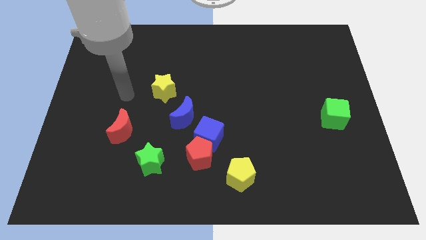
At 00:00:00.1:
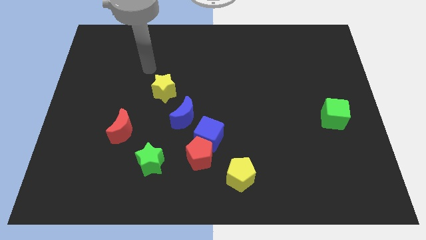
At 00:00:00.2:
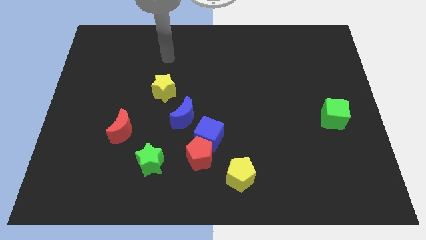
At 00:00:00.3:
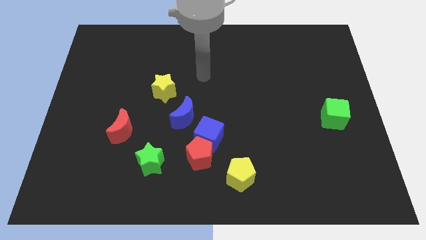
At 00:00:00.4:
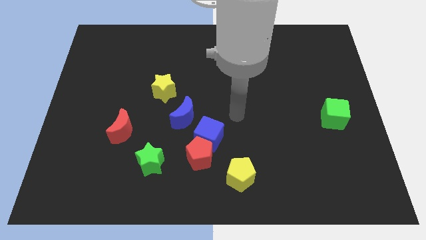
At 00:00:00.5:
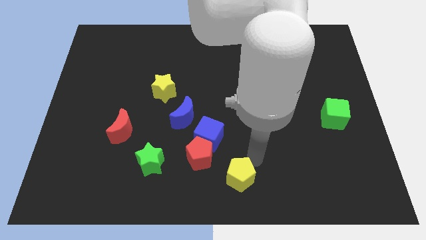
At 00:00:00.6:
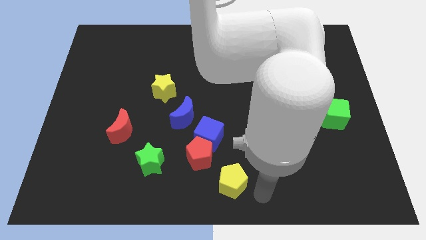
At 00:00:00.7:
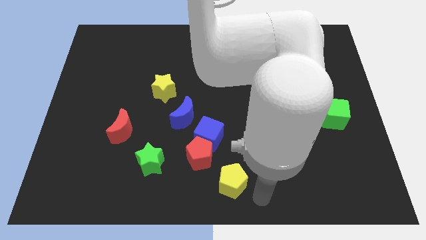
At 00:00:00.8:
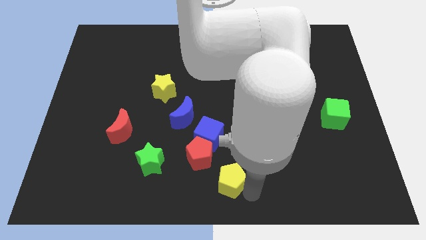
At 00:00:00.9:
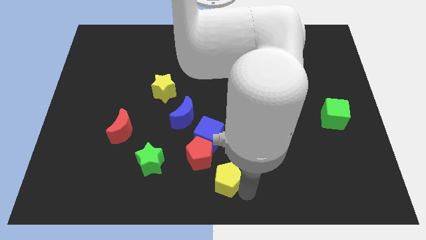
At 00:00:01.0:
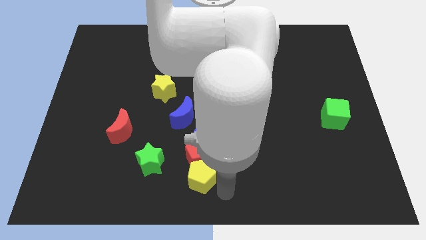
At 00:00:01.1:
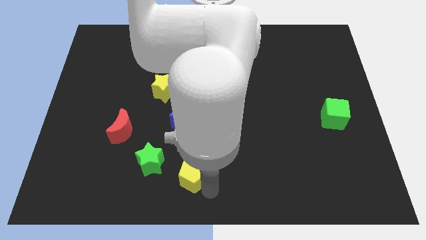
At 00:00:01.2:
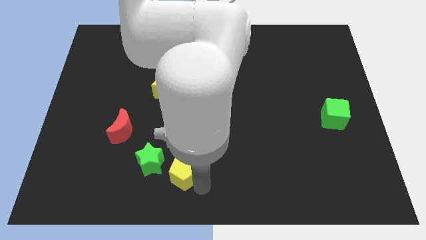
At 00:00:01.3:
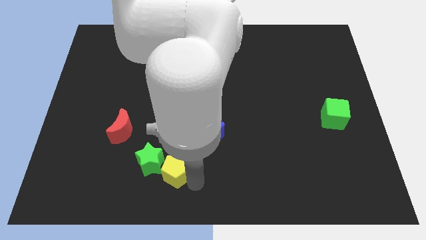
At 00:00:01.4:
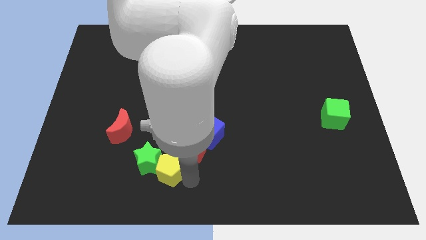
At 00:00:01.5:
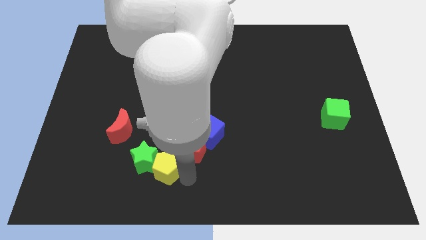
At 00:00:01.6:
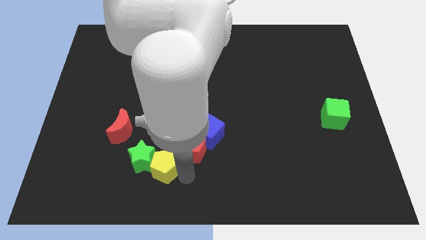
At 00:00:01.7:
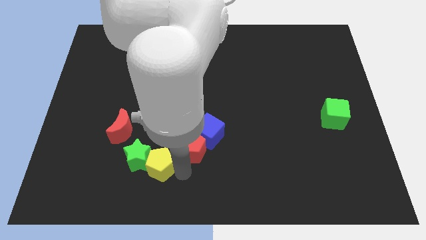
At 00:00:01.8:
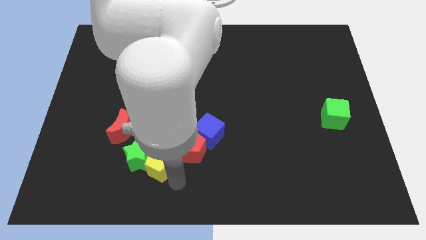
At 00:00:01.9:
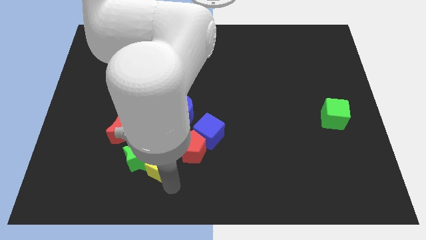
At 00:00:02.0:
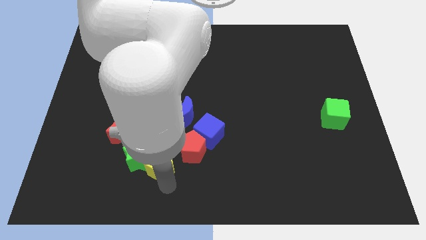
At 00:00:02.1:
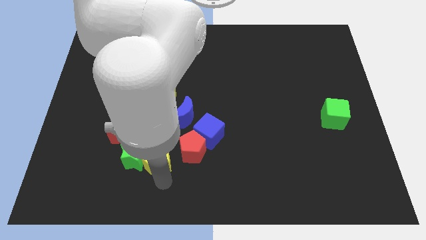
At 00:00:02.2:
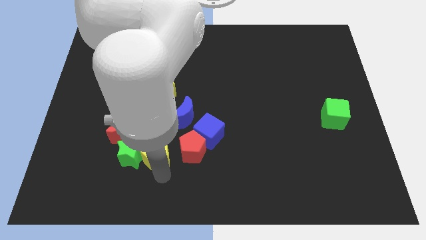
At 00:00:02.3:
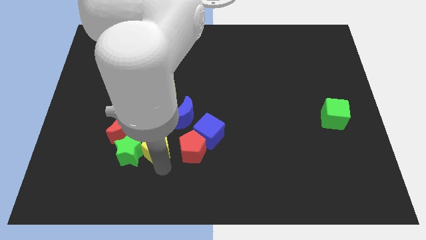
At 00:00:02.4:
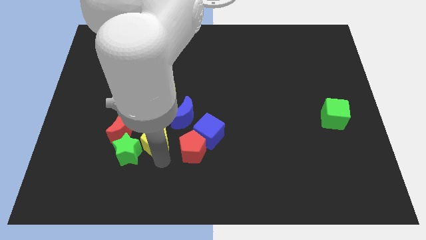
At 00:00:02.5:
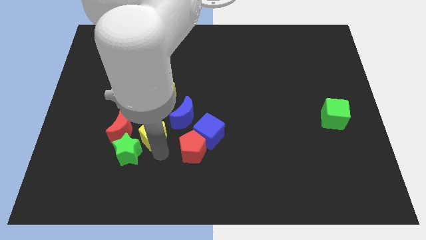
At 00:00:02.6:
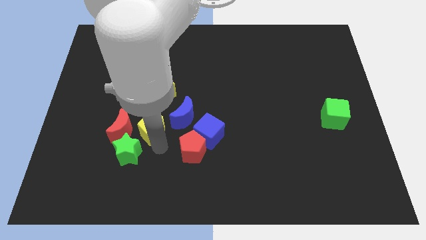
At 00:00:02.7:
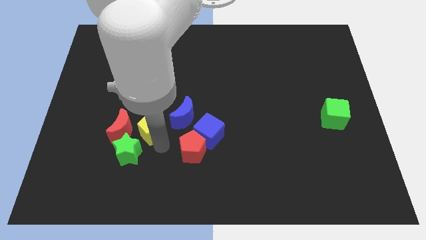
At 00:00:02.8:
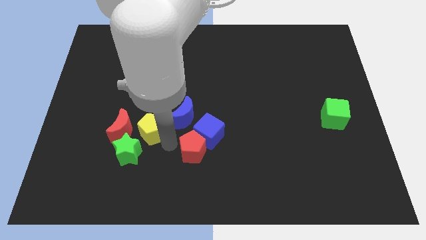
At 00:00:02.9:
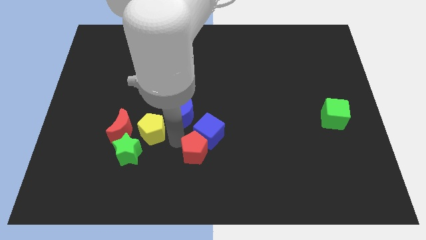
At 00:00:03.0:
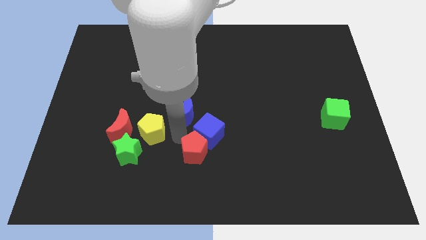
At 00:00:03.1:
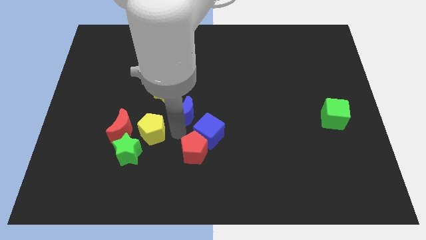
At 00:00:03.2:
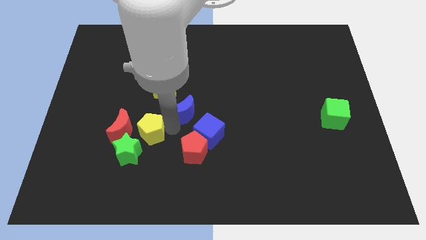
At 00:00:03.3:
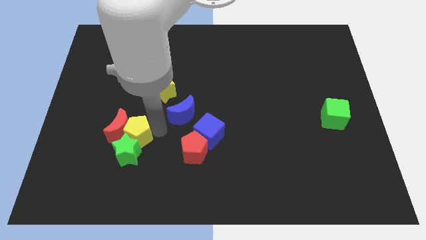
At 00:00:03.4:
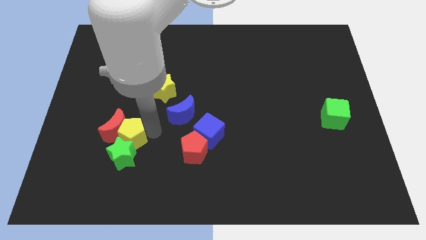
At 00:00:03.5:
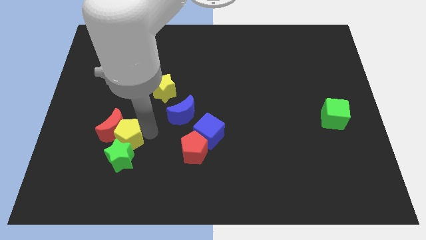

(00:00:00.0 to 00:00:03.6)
push the yellow pentagon close to the red moon

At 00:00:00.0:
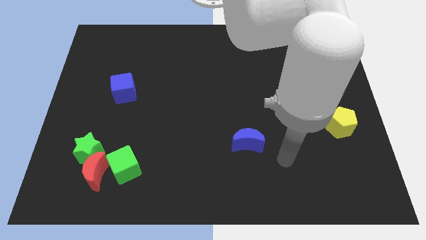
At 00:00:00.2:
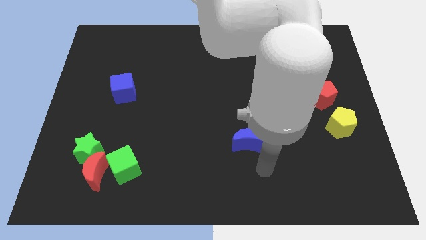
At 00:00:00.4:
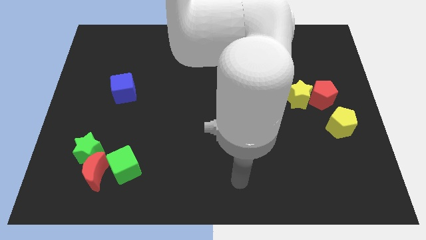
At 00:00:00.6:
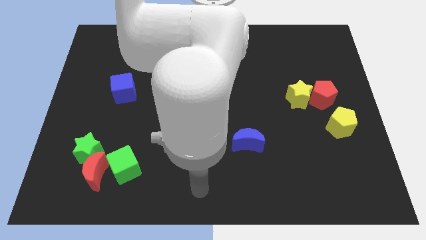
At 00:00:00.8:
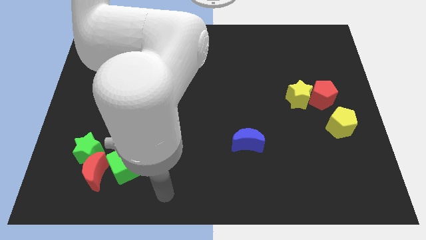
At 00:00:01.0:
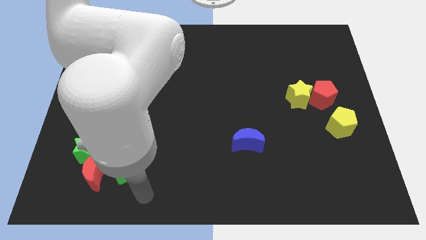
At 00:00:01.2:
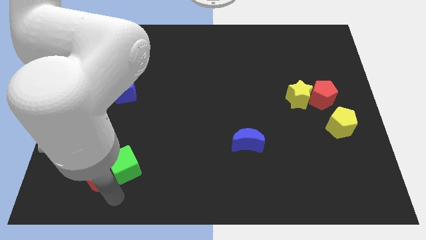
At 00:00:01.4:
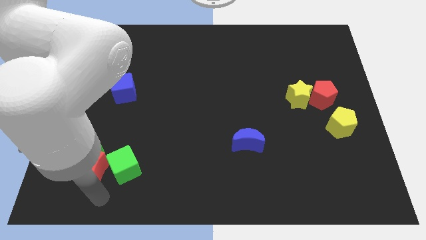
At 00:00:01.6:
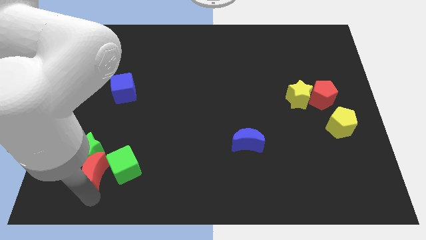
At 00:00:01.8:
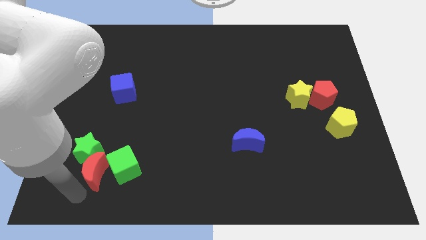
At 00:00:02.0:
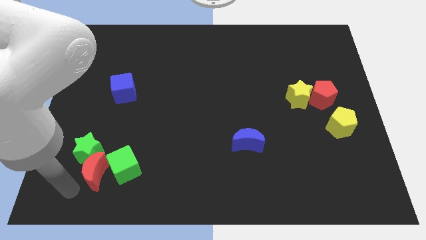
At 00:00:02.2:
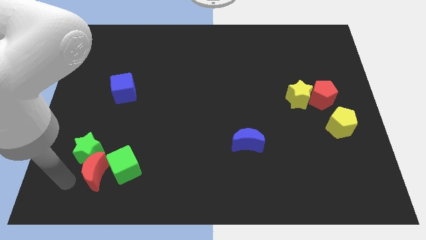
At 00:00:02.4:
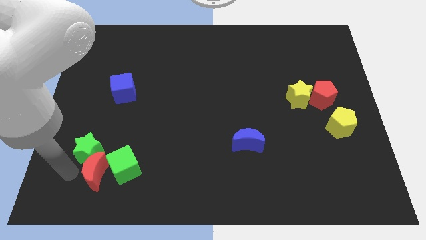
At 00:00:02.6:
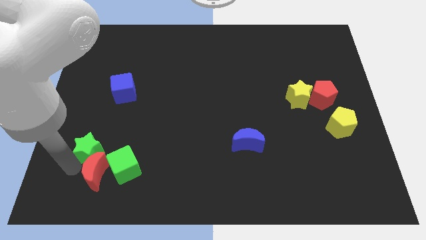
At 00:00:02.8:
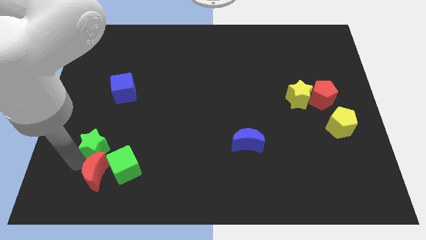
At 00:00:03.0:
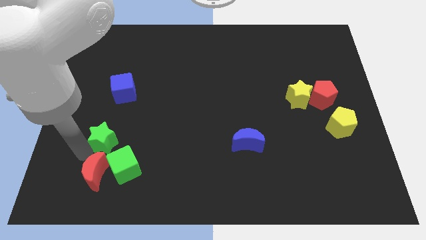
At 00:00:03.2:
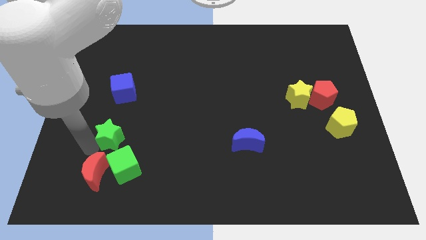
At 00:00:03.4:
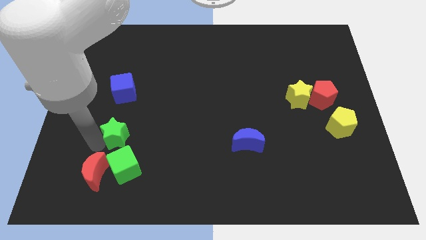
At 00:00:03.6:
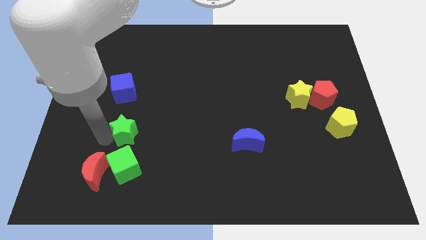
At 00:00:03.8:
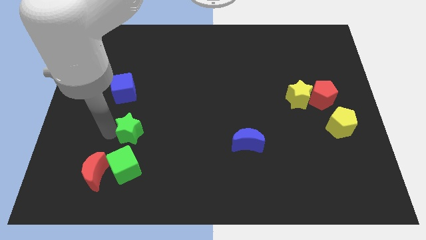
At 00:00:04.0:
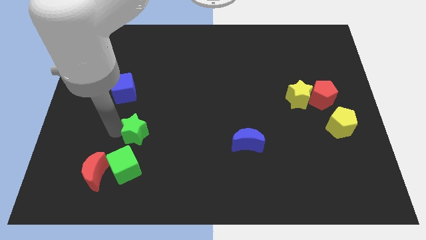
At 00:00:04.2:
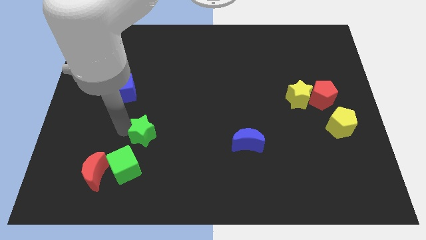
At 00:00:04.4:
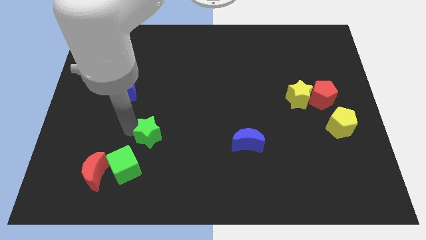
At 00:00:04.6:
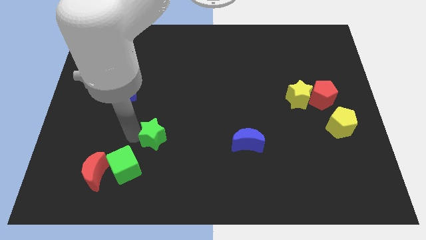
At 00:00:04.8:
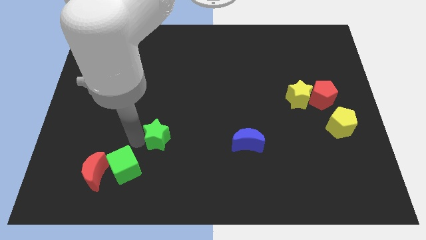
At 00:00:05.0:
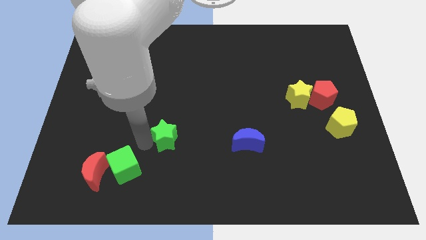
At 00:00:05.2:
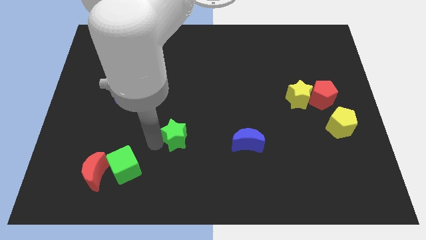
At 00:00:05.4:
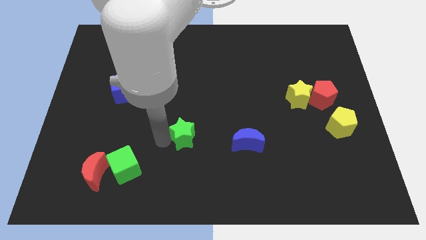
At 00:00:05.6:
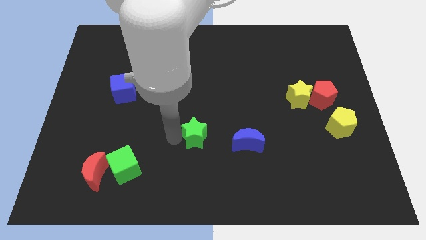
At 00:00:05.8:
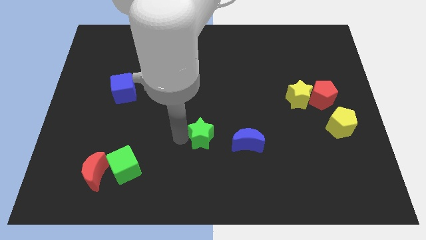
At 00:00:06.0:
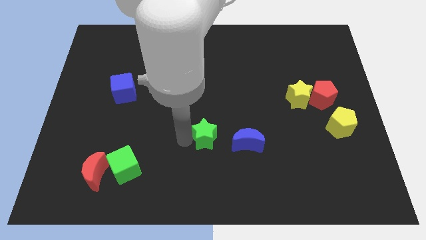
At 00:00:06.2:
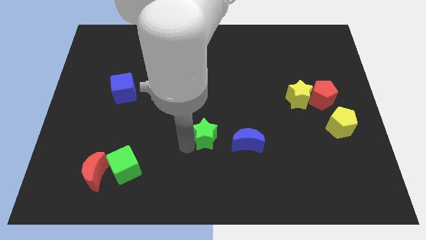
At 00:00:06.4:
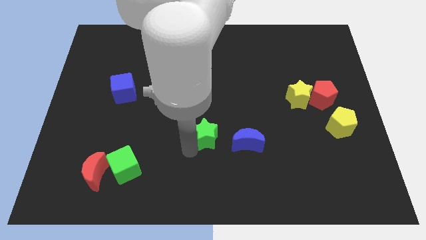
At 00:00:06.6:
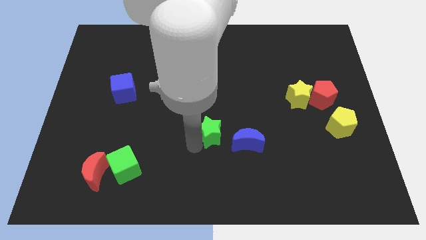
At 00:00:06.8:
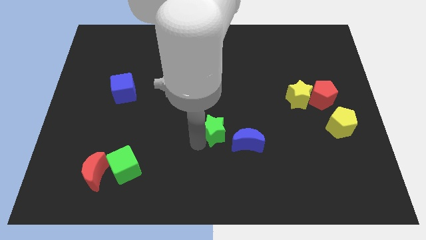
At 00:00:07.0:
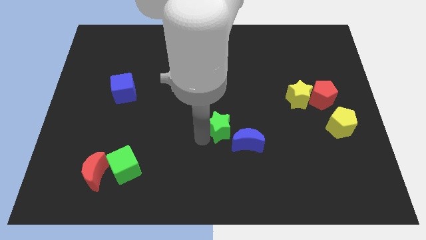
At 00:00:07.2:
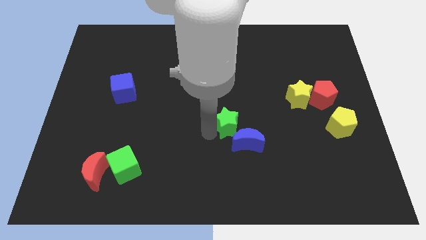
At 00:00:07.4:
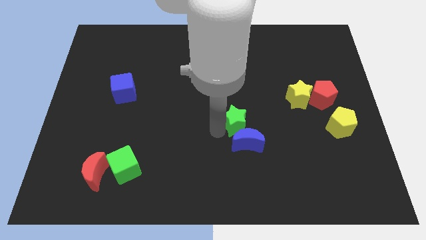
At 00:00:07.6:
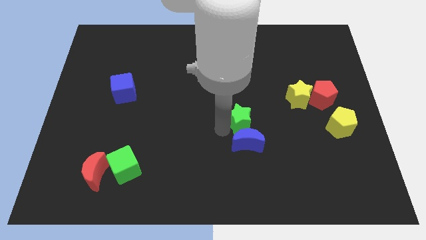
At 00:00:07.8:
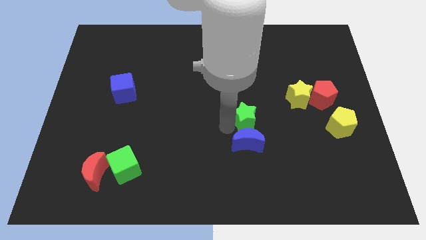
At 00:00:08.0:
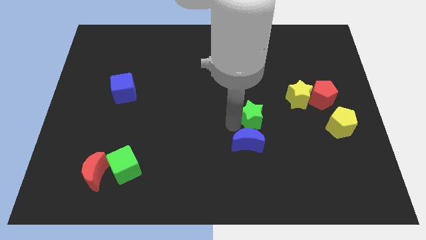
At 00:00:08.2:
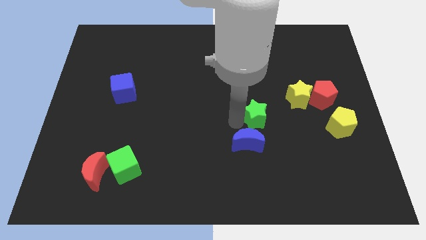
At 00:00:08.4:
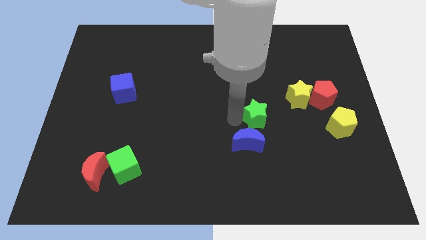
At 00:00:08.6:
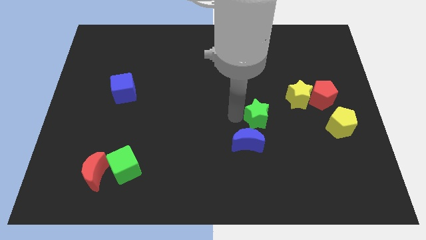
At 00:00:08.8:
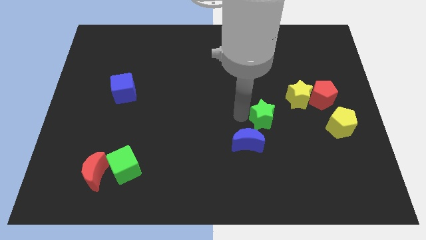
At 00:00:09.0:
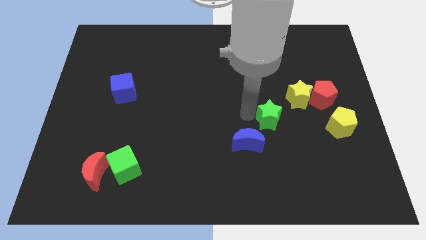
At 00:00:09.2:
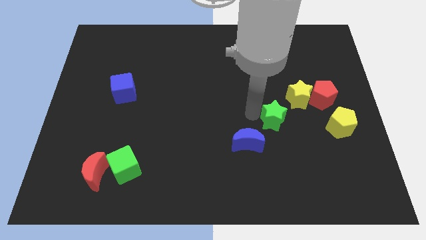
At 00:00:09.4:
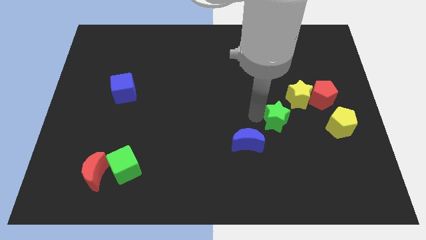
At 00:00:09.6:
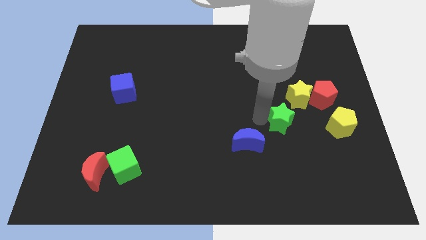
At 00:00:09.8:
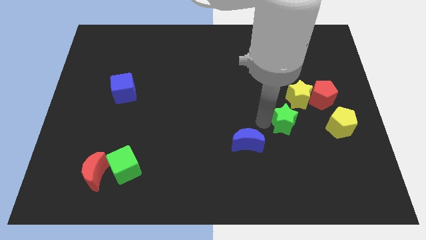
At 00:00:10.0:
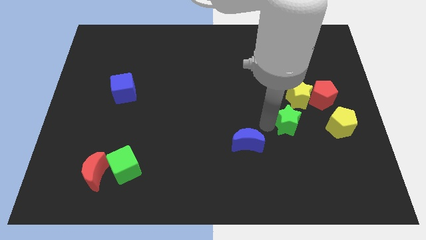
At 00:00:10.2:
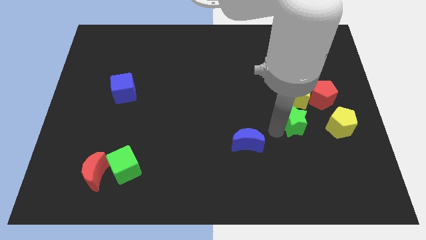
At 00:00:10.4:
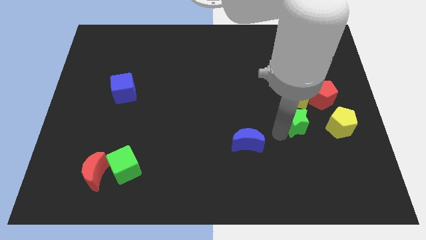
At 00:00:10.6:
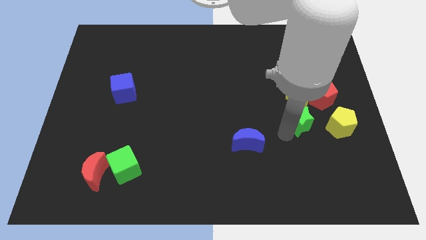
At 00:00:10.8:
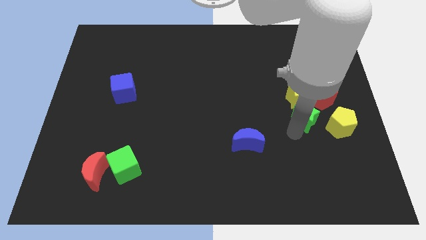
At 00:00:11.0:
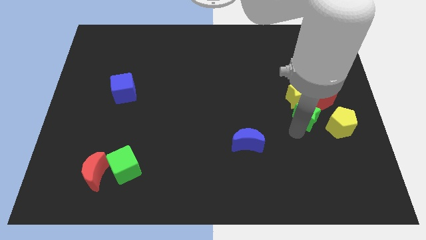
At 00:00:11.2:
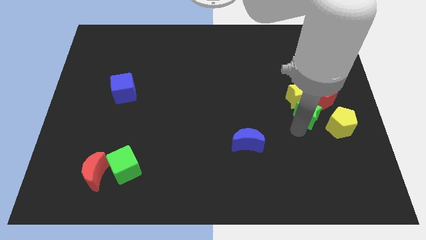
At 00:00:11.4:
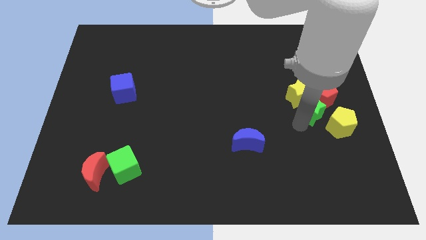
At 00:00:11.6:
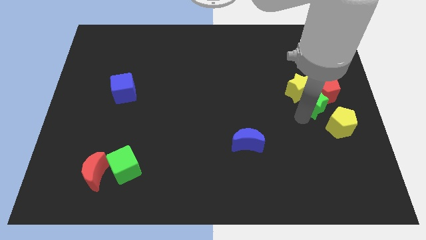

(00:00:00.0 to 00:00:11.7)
push the green star to the red pentagon
